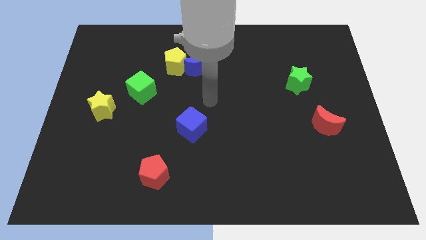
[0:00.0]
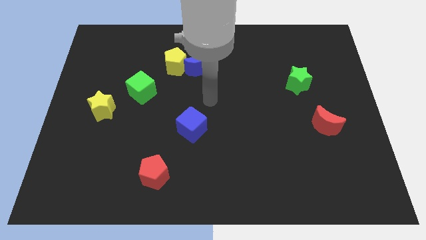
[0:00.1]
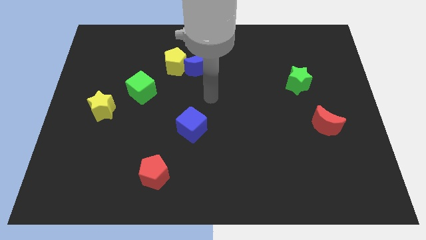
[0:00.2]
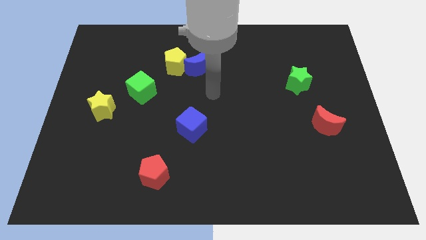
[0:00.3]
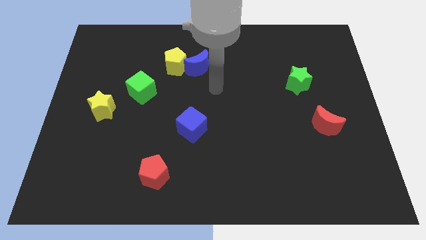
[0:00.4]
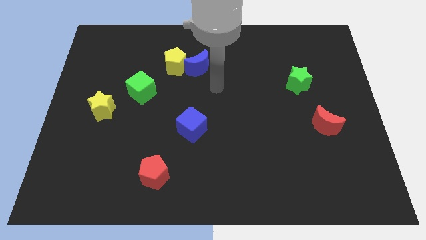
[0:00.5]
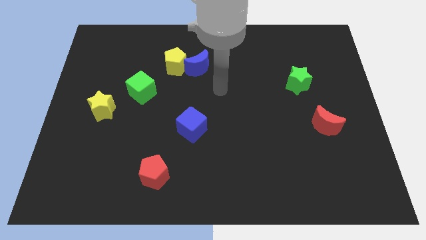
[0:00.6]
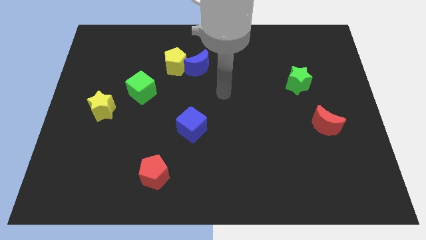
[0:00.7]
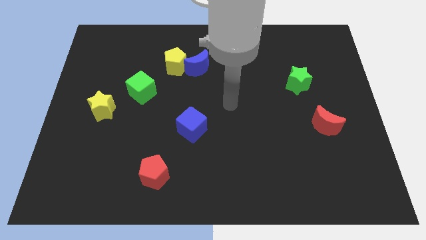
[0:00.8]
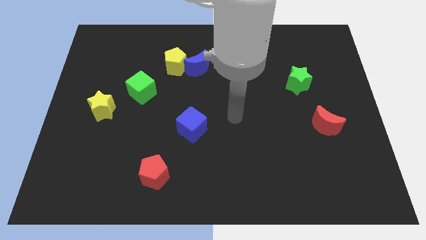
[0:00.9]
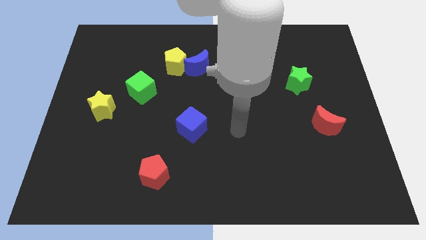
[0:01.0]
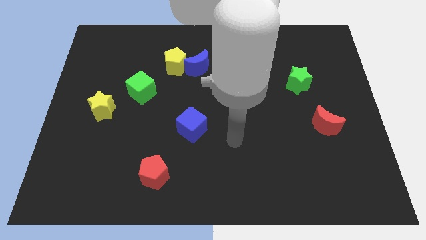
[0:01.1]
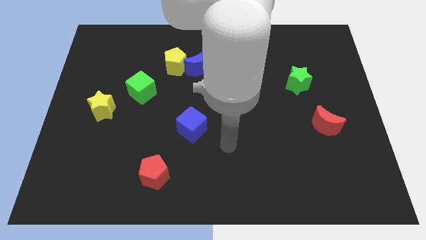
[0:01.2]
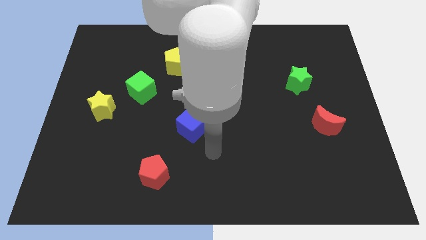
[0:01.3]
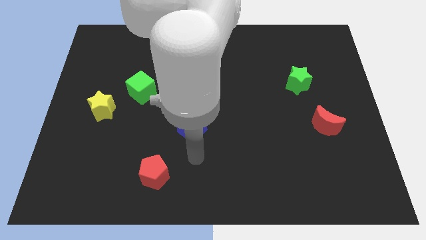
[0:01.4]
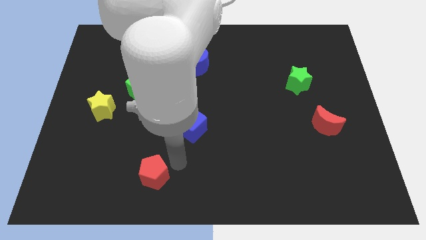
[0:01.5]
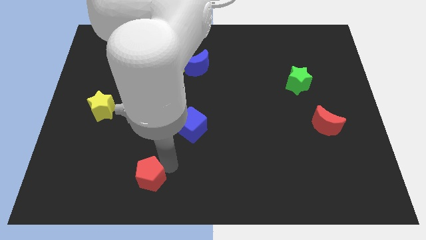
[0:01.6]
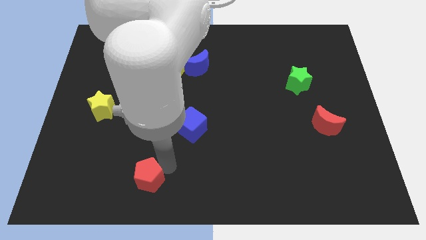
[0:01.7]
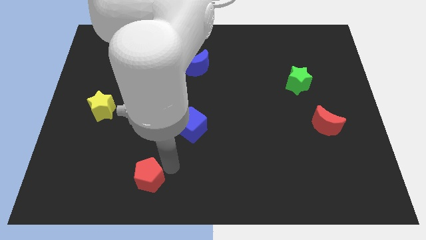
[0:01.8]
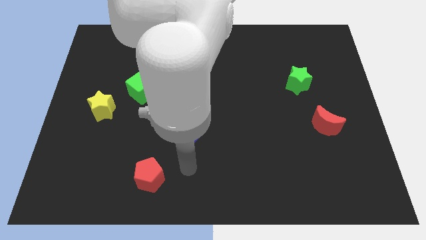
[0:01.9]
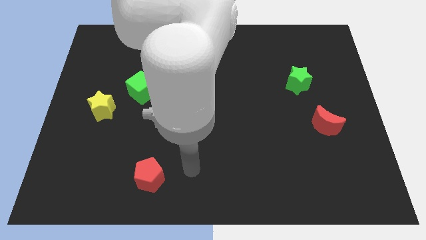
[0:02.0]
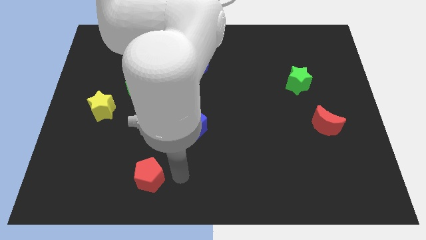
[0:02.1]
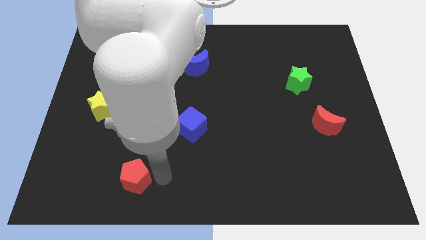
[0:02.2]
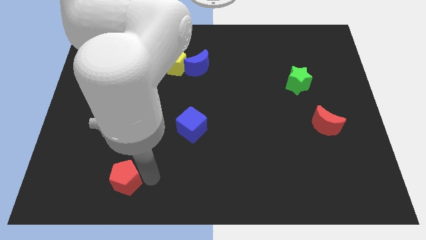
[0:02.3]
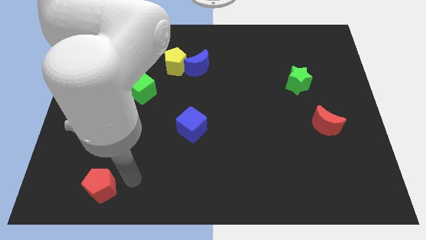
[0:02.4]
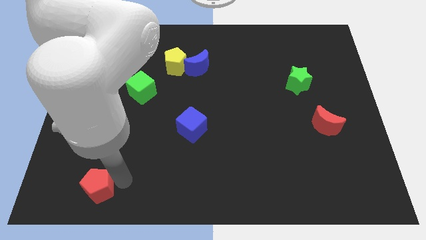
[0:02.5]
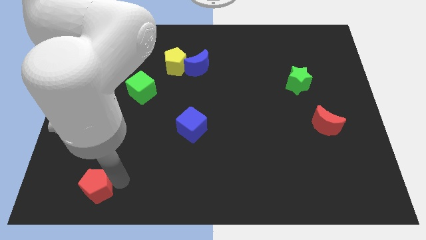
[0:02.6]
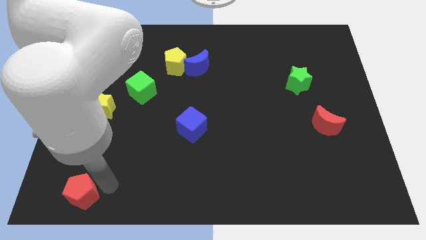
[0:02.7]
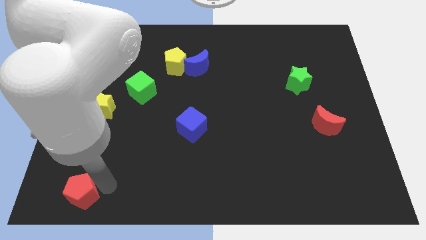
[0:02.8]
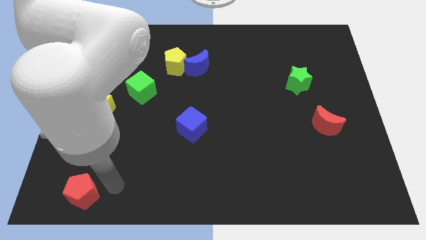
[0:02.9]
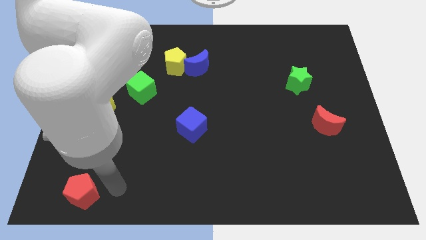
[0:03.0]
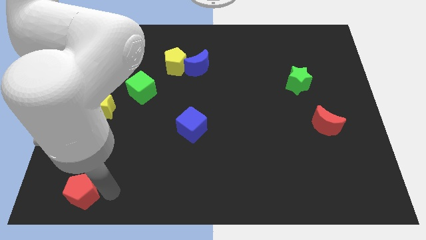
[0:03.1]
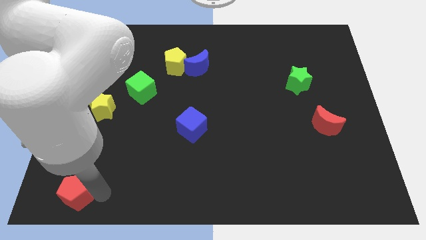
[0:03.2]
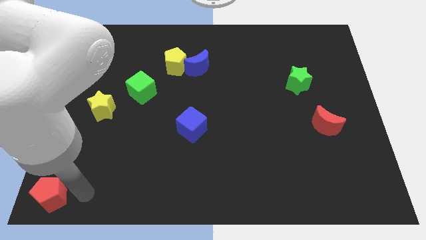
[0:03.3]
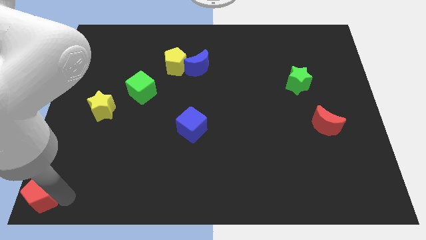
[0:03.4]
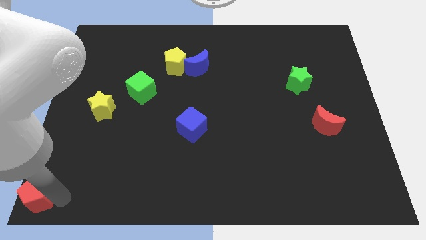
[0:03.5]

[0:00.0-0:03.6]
push the red pentagon towards the bottom left corner of the board

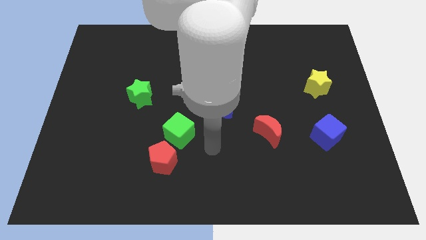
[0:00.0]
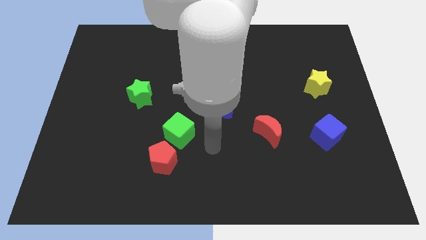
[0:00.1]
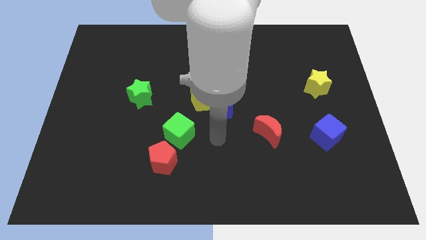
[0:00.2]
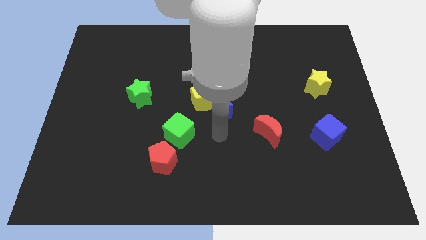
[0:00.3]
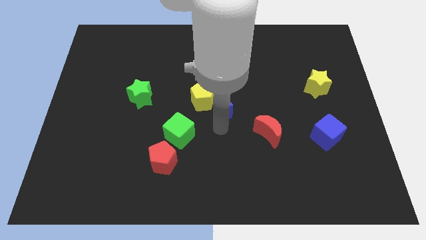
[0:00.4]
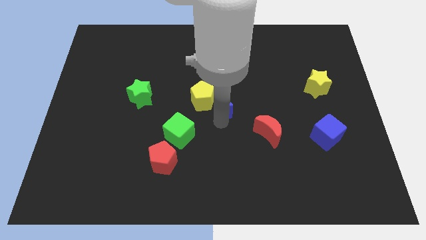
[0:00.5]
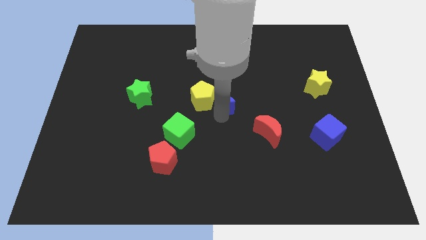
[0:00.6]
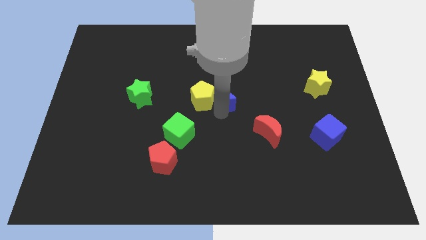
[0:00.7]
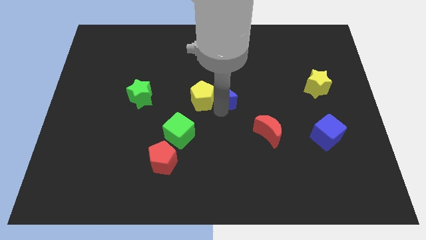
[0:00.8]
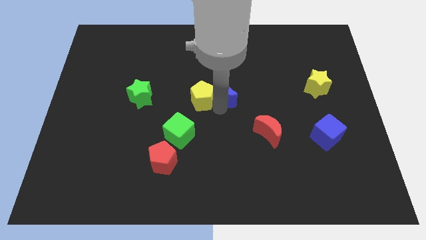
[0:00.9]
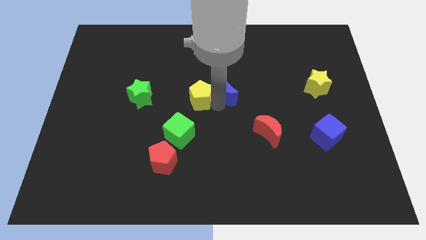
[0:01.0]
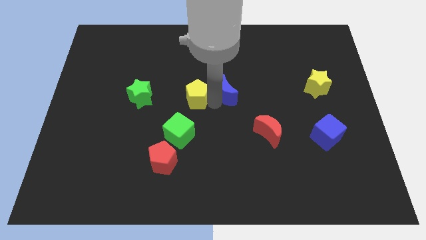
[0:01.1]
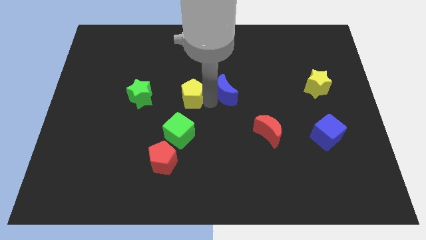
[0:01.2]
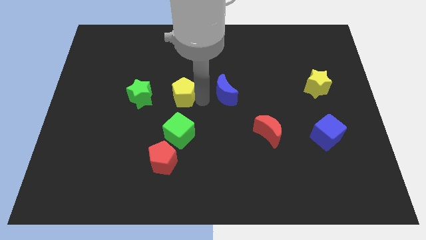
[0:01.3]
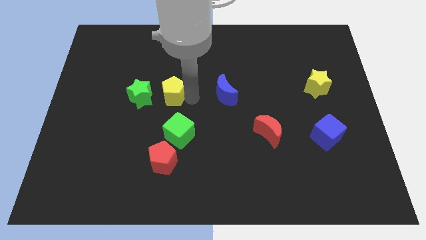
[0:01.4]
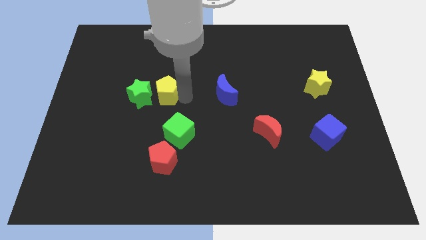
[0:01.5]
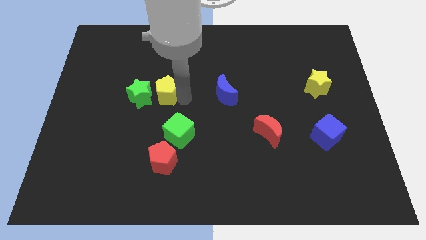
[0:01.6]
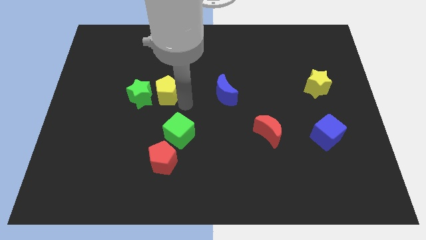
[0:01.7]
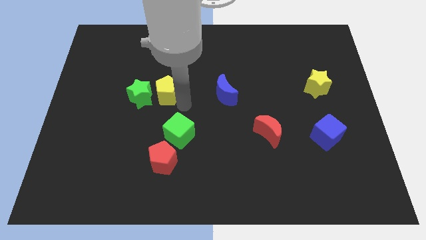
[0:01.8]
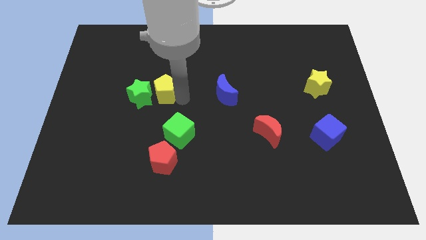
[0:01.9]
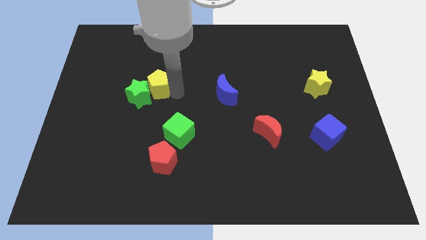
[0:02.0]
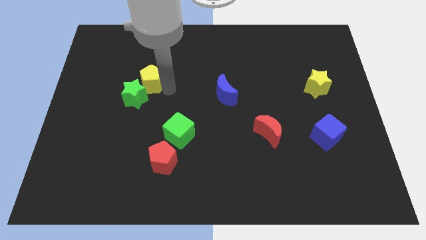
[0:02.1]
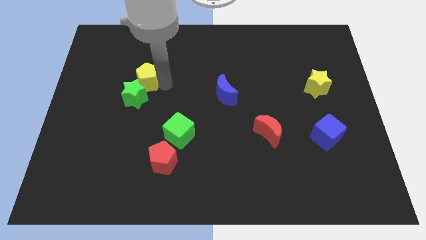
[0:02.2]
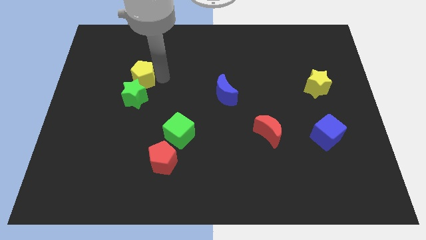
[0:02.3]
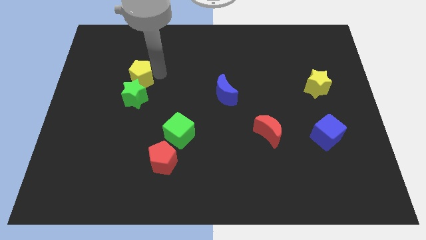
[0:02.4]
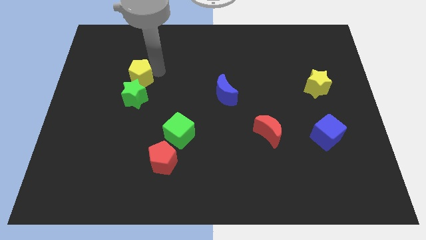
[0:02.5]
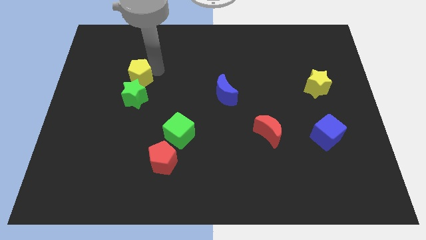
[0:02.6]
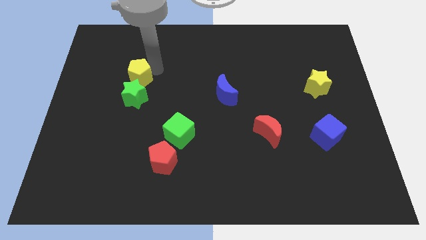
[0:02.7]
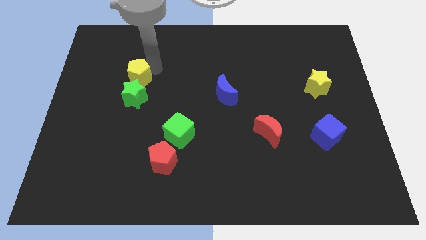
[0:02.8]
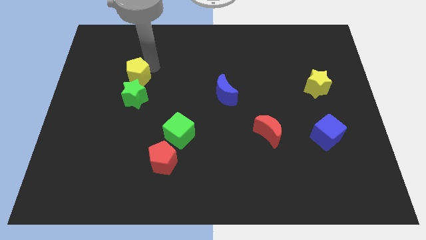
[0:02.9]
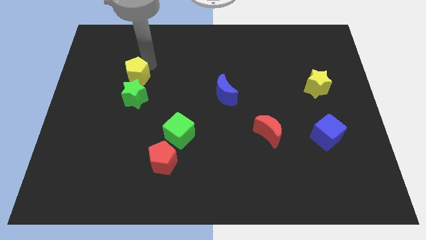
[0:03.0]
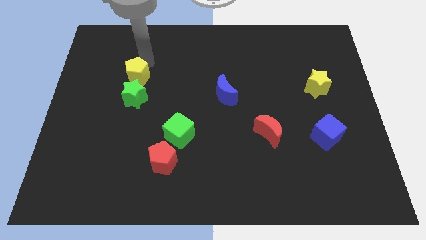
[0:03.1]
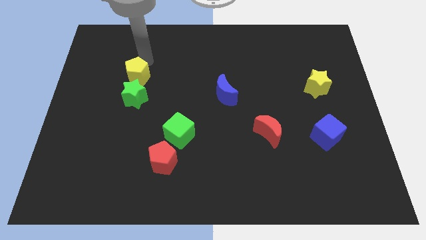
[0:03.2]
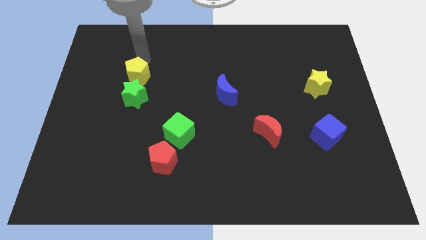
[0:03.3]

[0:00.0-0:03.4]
place yellow pentagon above green star

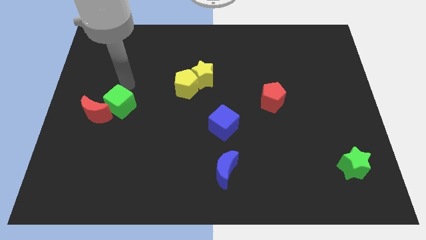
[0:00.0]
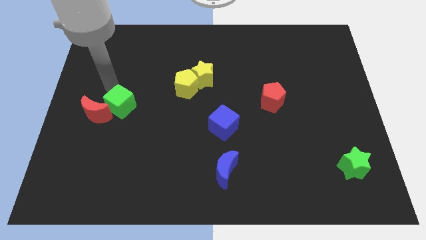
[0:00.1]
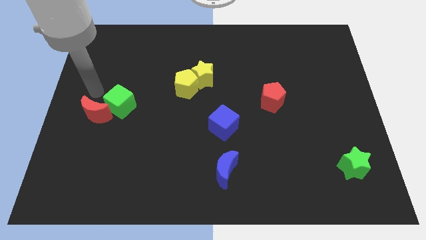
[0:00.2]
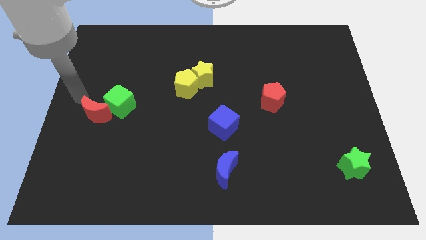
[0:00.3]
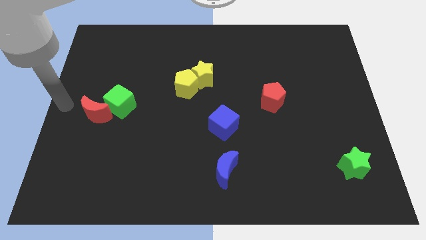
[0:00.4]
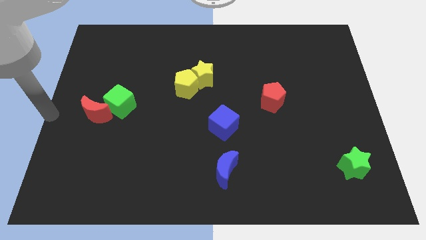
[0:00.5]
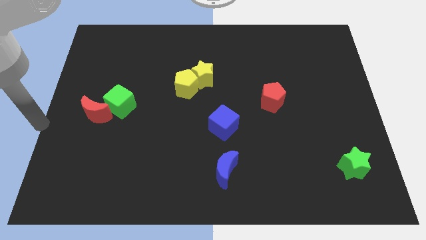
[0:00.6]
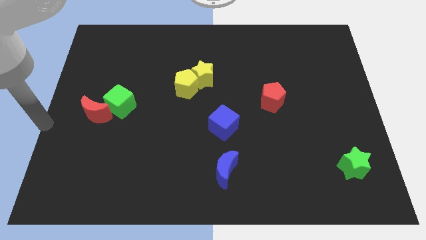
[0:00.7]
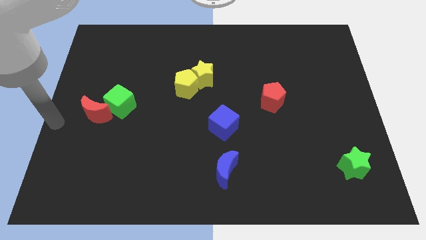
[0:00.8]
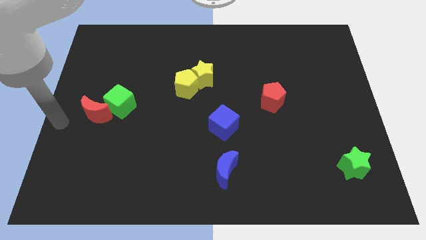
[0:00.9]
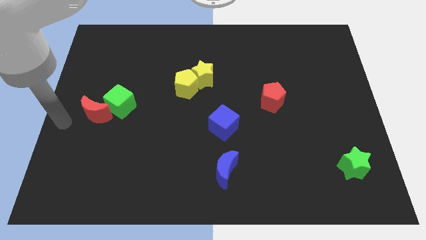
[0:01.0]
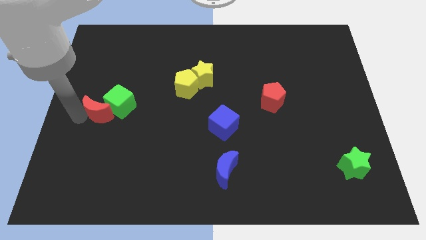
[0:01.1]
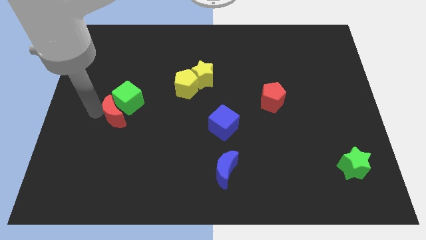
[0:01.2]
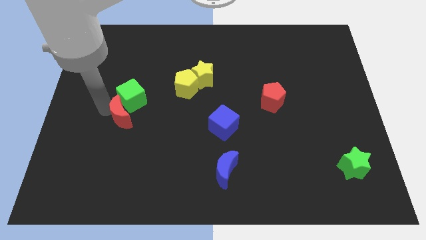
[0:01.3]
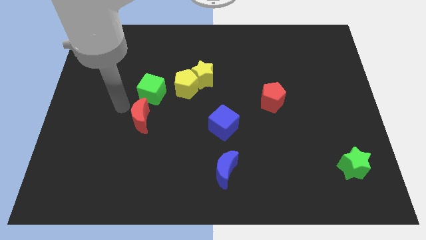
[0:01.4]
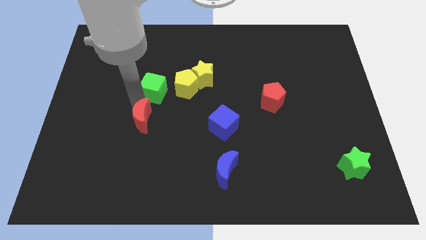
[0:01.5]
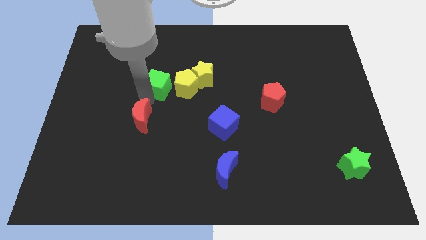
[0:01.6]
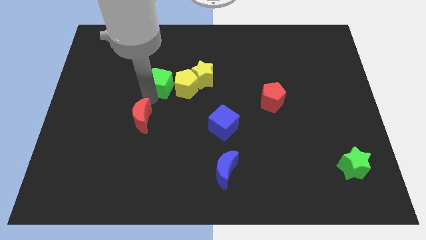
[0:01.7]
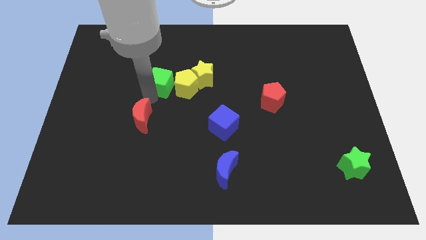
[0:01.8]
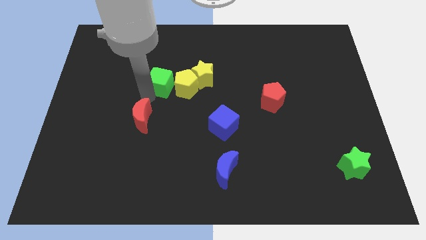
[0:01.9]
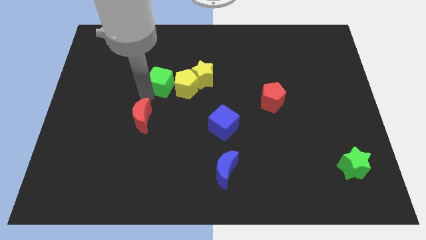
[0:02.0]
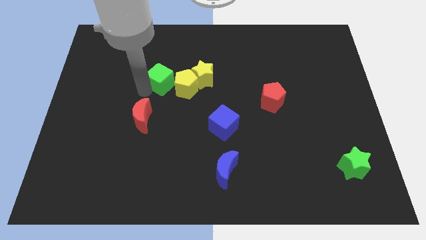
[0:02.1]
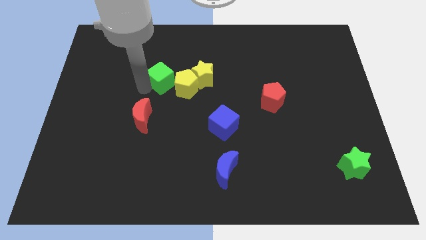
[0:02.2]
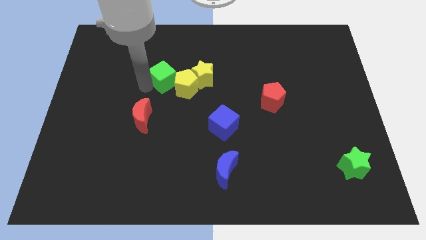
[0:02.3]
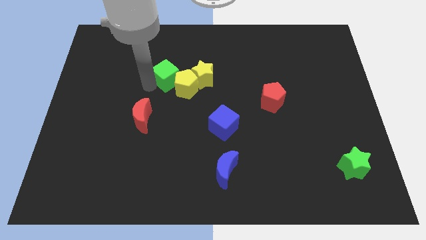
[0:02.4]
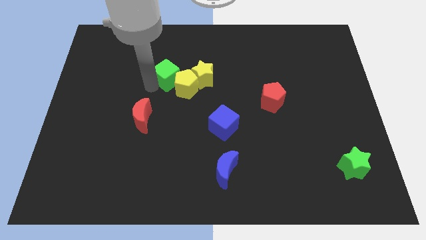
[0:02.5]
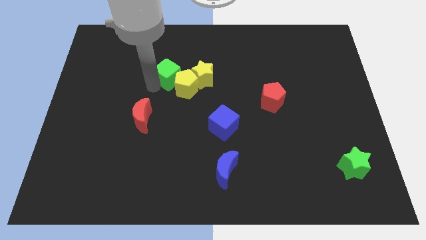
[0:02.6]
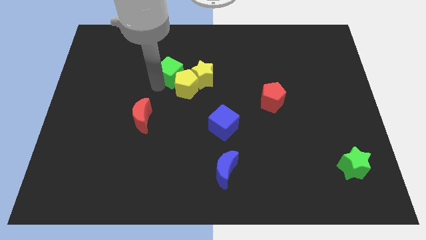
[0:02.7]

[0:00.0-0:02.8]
separate the red crescent and the green cube
